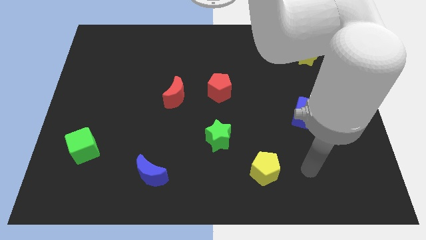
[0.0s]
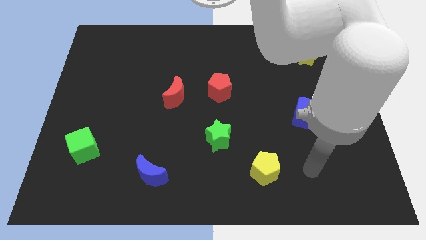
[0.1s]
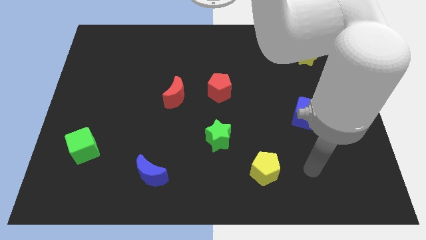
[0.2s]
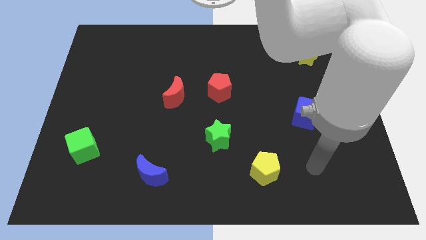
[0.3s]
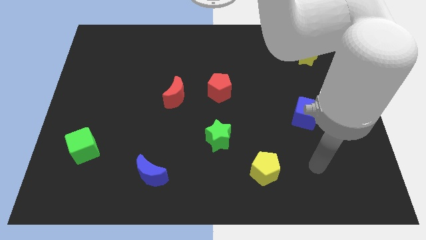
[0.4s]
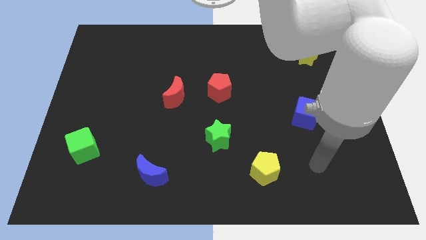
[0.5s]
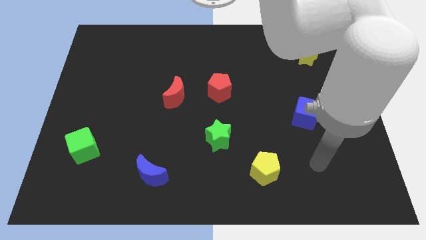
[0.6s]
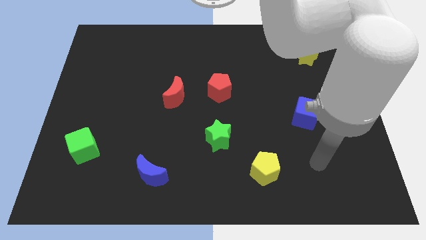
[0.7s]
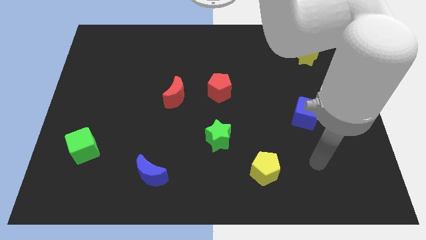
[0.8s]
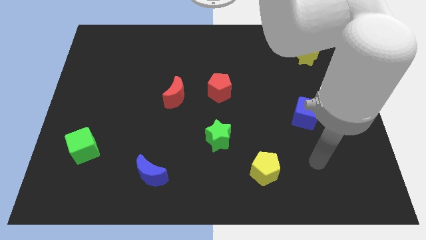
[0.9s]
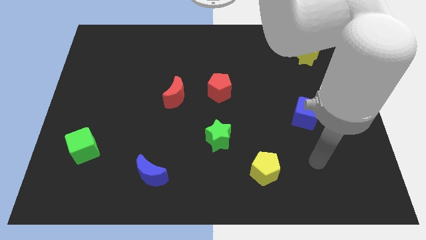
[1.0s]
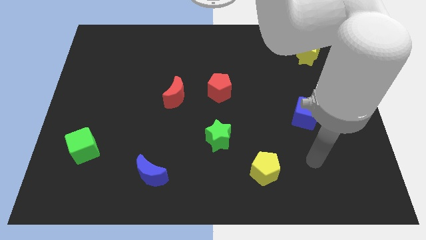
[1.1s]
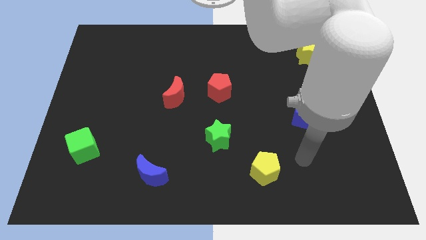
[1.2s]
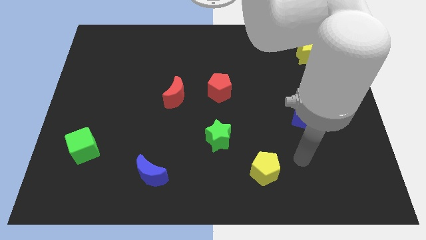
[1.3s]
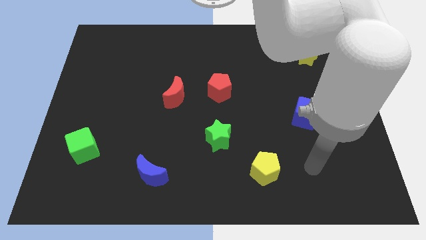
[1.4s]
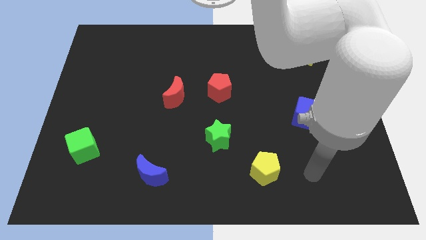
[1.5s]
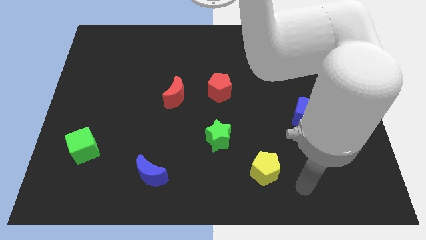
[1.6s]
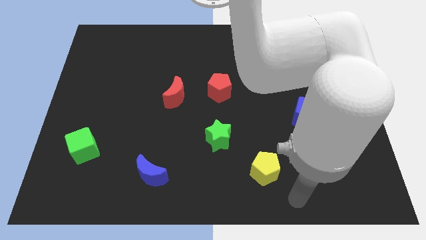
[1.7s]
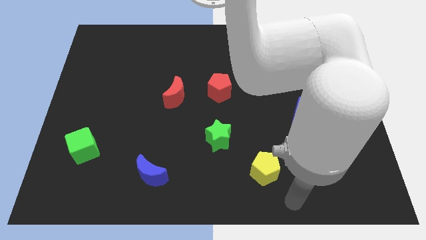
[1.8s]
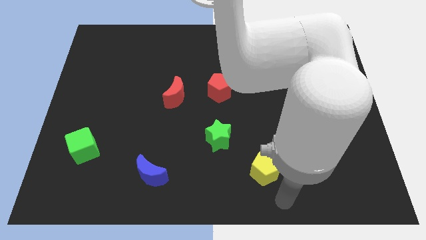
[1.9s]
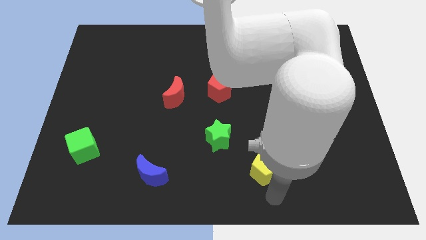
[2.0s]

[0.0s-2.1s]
point your hand below the yellow pentagon

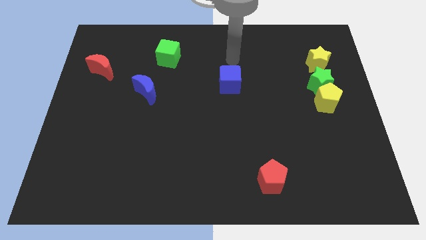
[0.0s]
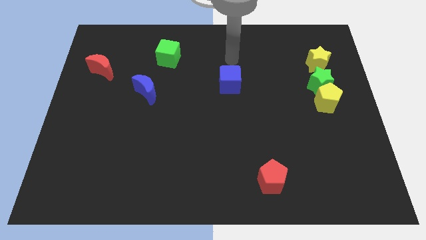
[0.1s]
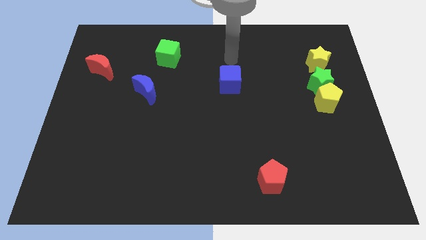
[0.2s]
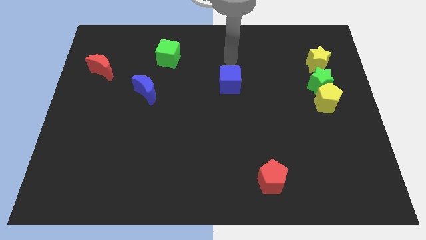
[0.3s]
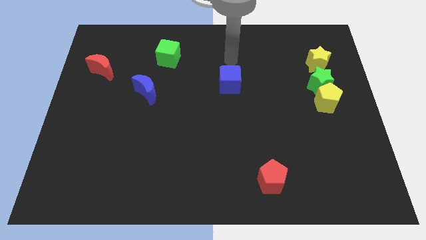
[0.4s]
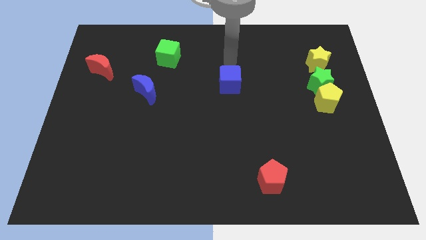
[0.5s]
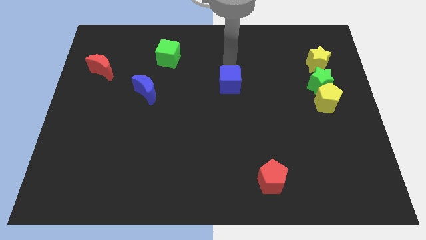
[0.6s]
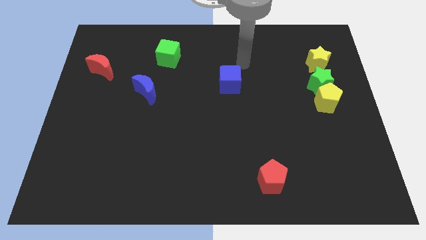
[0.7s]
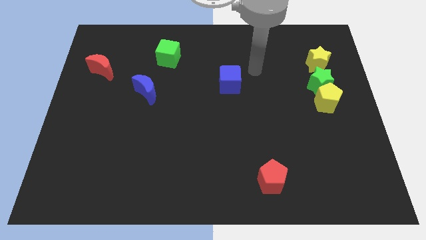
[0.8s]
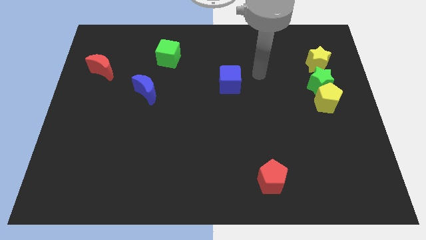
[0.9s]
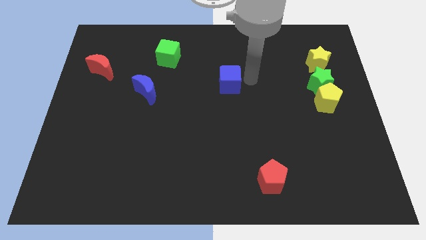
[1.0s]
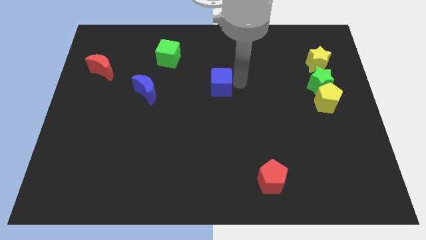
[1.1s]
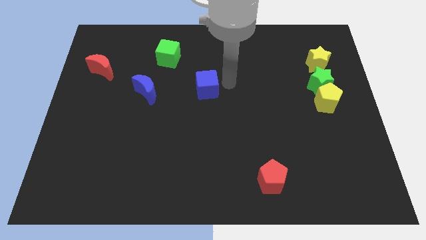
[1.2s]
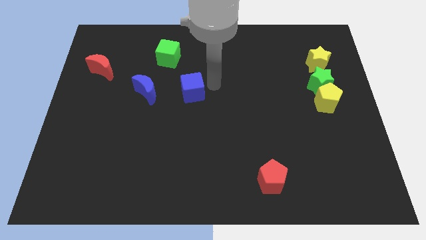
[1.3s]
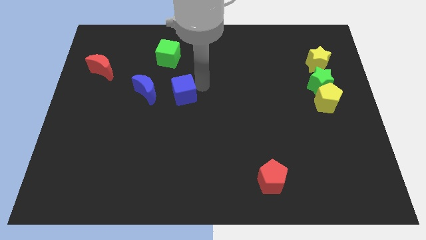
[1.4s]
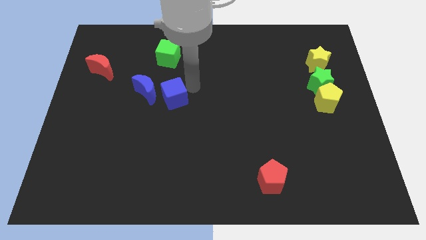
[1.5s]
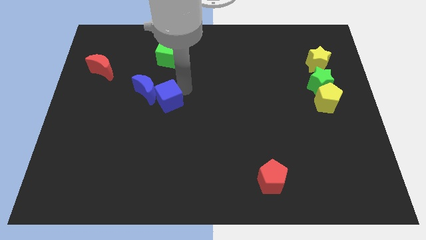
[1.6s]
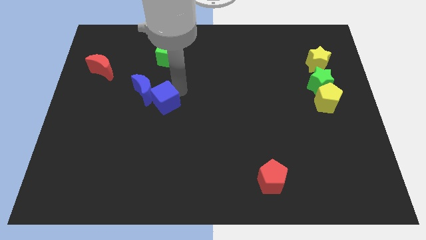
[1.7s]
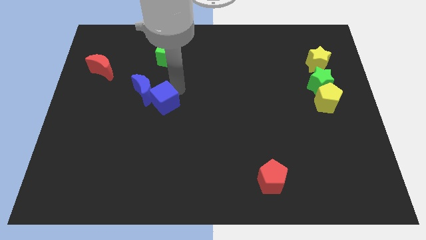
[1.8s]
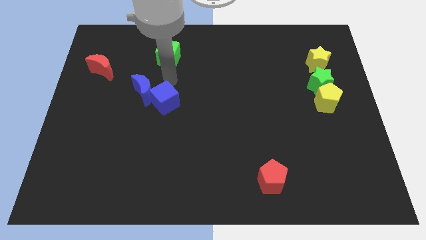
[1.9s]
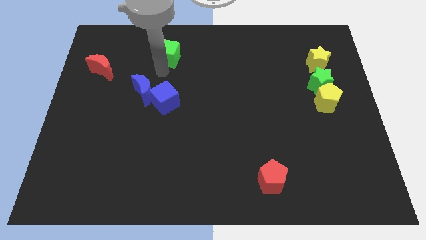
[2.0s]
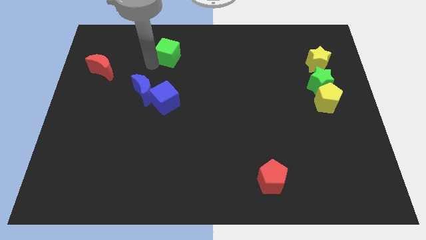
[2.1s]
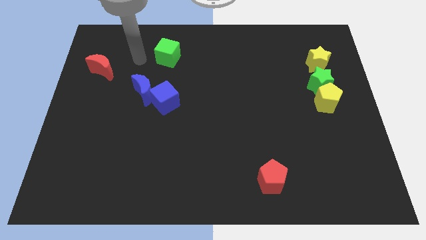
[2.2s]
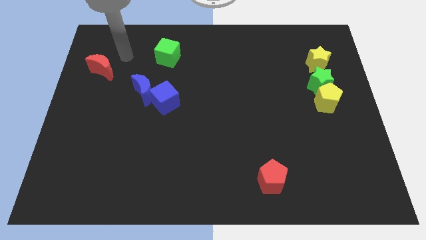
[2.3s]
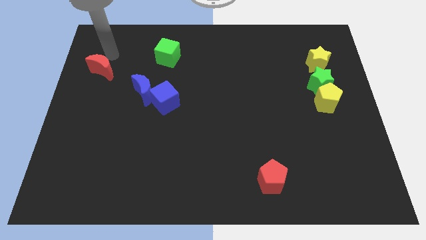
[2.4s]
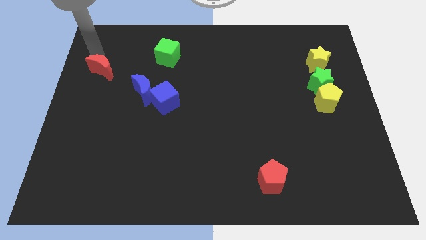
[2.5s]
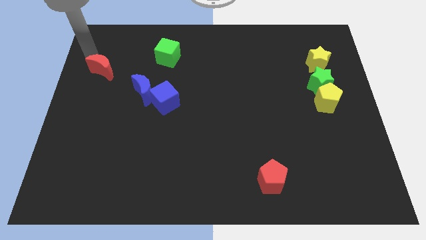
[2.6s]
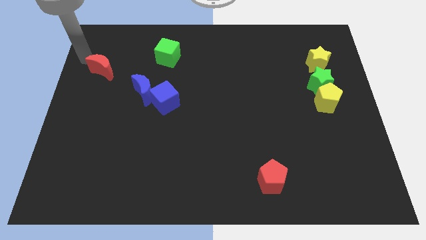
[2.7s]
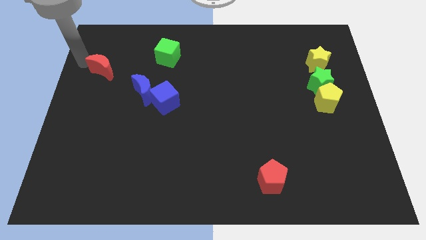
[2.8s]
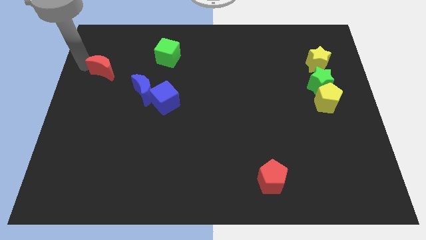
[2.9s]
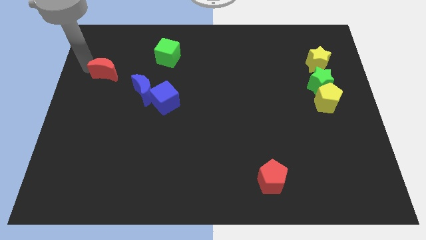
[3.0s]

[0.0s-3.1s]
push the blue cube to the bottom right side of the blue moon

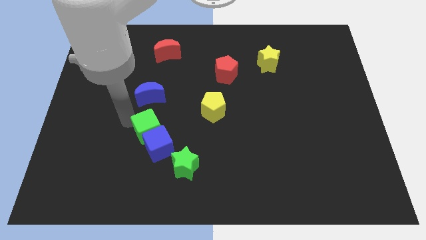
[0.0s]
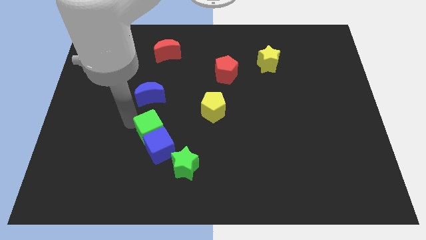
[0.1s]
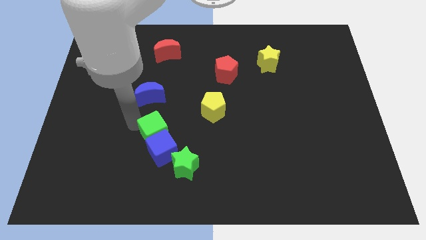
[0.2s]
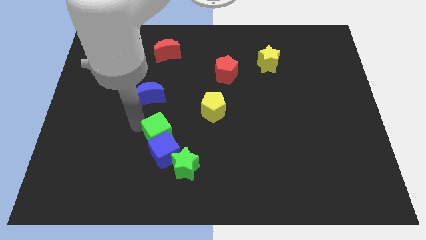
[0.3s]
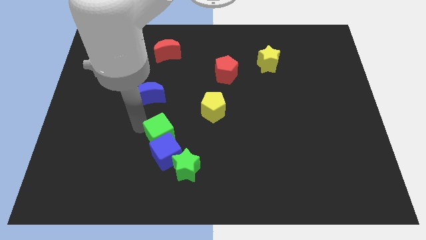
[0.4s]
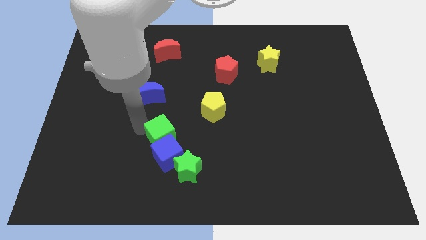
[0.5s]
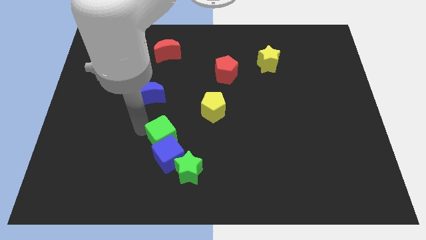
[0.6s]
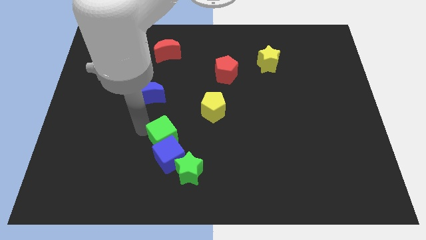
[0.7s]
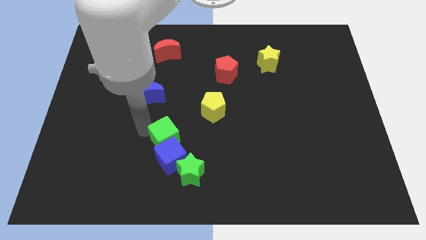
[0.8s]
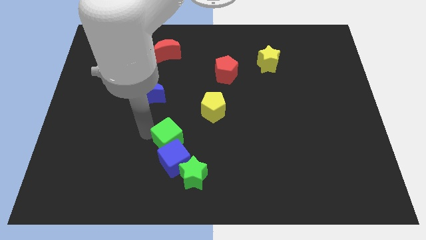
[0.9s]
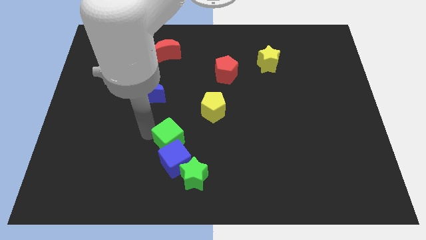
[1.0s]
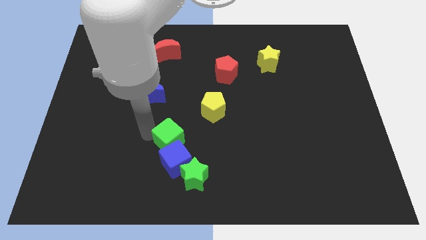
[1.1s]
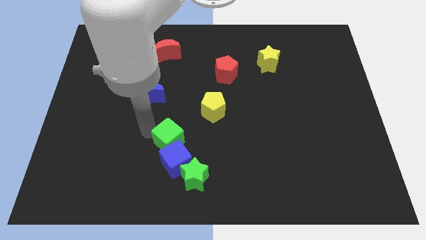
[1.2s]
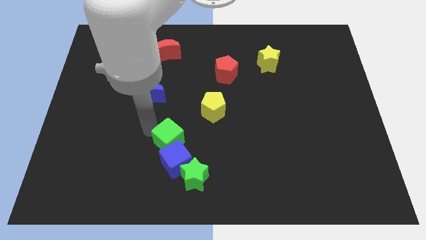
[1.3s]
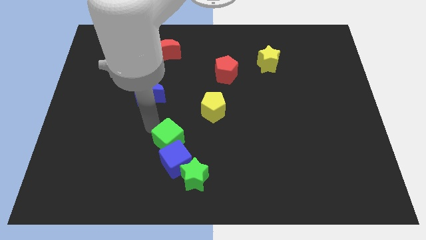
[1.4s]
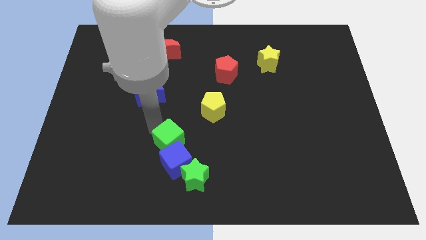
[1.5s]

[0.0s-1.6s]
move cubes in to the green star

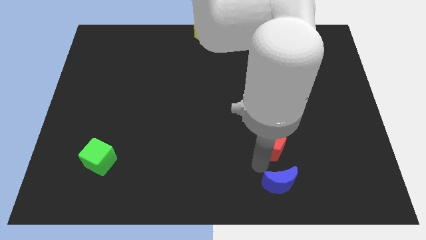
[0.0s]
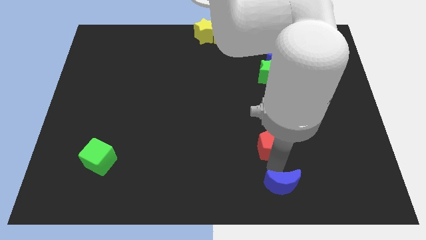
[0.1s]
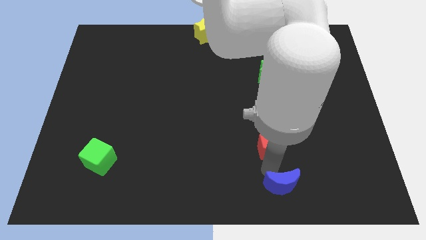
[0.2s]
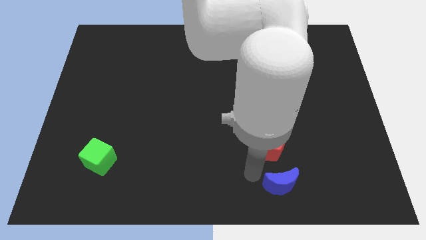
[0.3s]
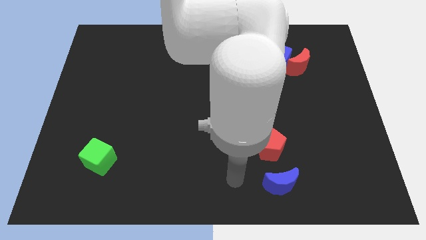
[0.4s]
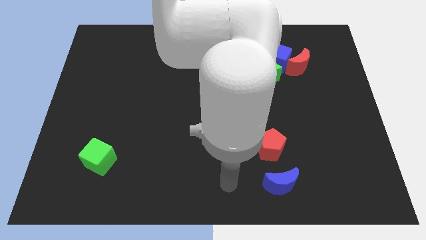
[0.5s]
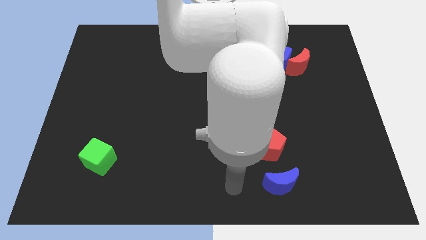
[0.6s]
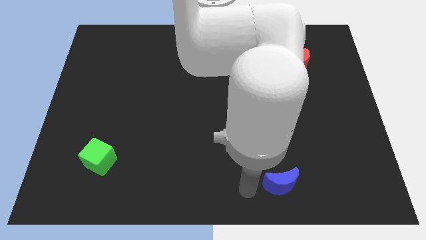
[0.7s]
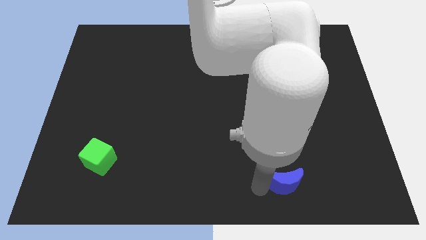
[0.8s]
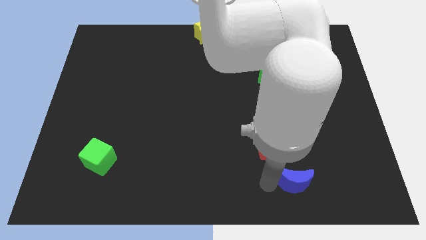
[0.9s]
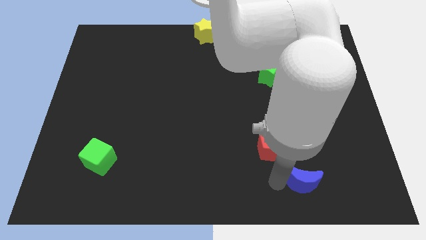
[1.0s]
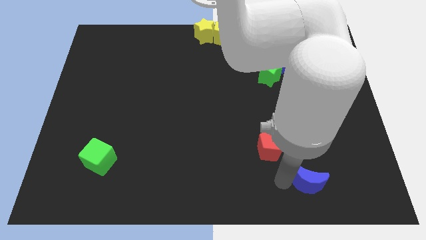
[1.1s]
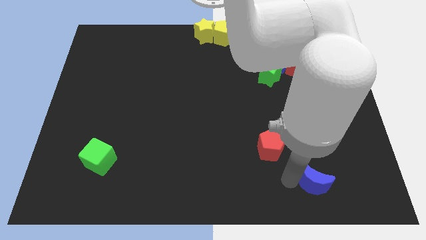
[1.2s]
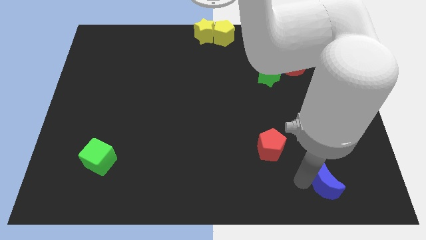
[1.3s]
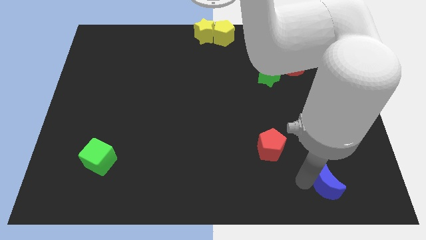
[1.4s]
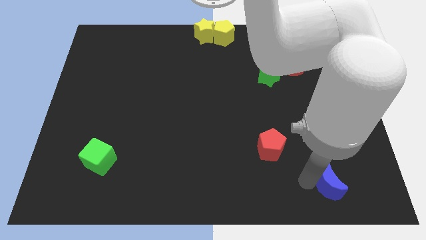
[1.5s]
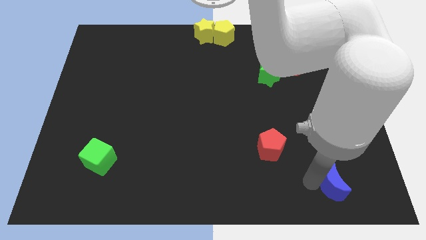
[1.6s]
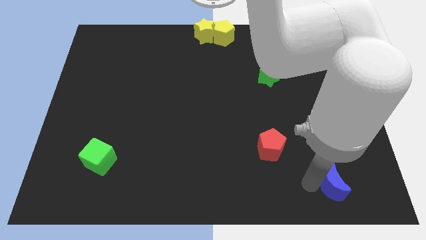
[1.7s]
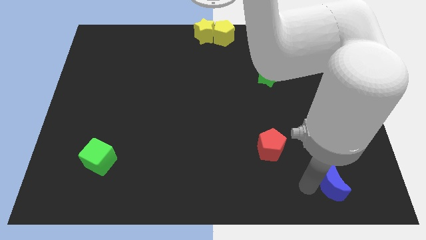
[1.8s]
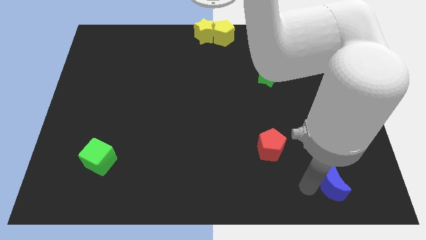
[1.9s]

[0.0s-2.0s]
move the blue moon diagonally bottom right to the red pentagon

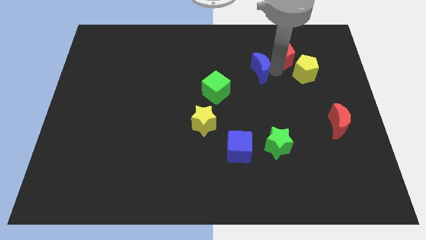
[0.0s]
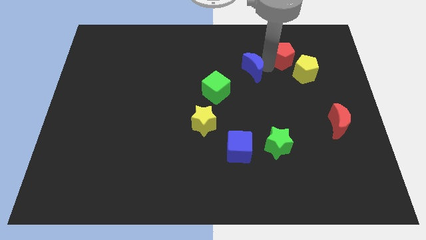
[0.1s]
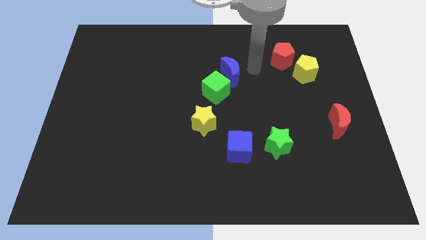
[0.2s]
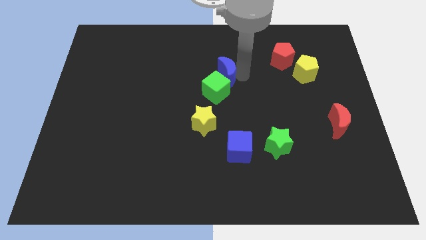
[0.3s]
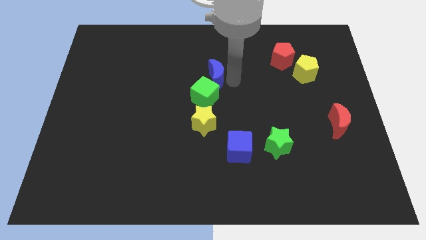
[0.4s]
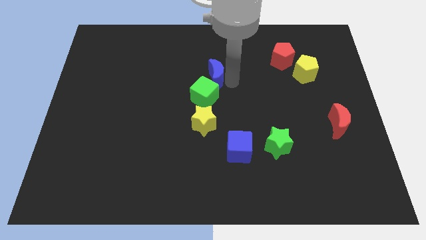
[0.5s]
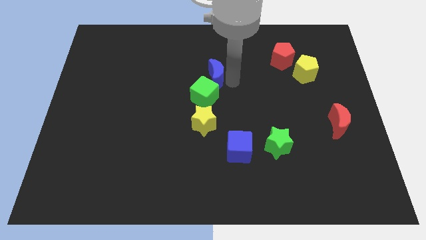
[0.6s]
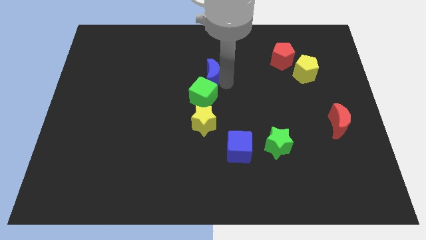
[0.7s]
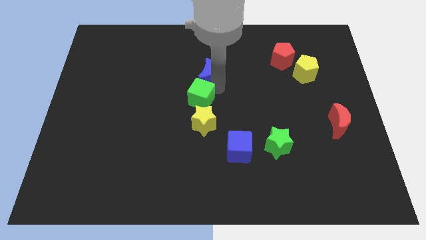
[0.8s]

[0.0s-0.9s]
push the blue moon into the green cube
